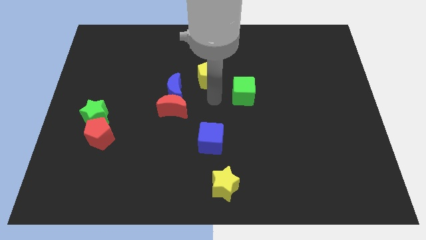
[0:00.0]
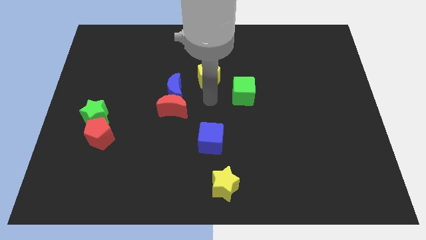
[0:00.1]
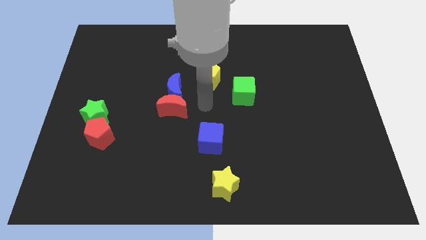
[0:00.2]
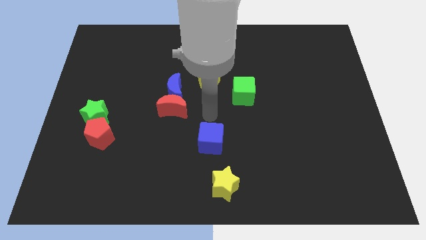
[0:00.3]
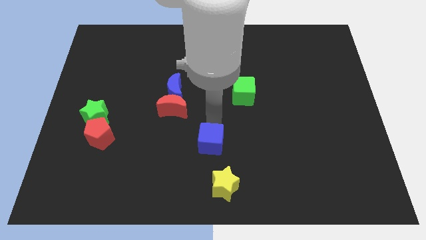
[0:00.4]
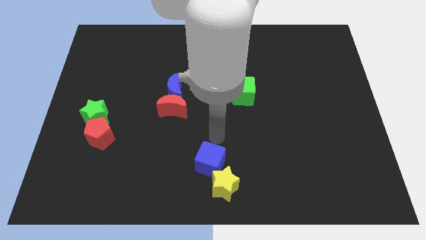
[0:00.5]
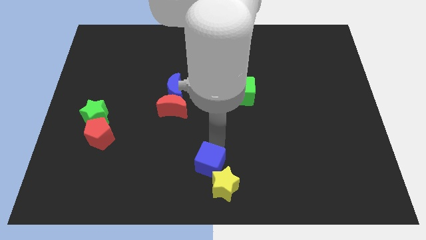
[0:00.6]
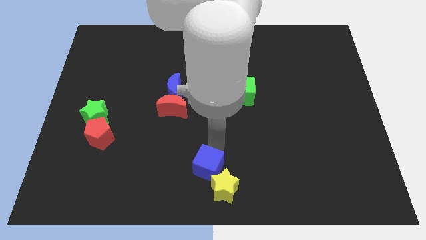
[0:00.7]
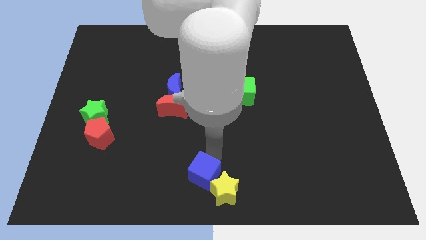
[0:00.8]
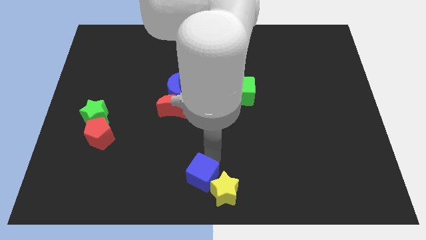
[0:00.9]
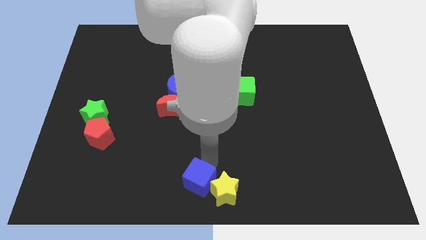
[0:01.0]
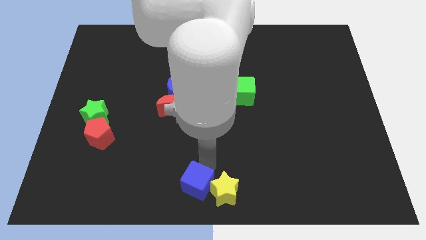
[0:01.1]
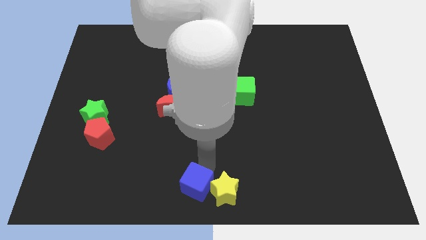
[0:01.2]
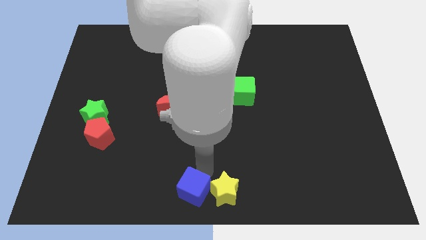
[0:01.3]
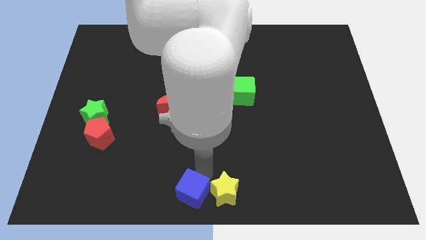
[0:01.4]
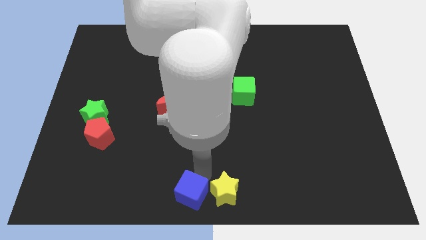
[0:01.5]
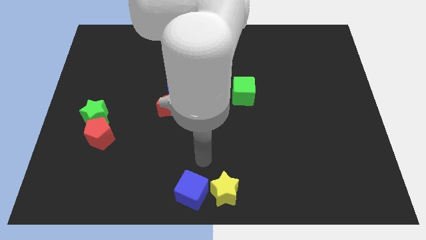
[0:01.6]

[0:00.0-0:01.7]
place the blue cube left to the yellow star

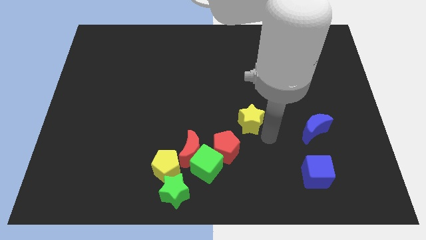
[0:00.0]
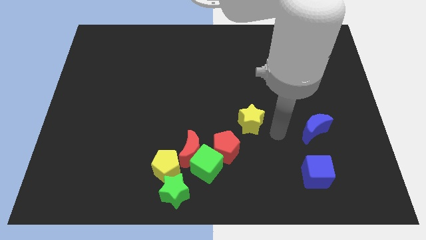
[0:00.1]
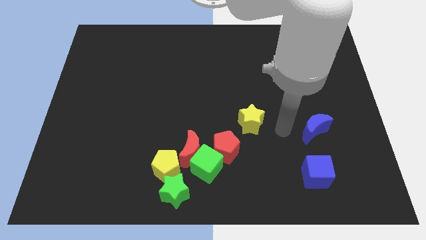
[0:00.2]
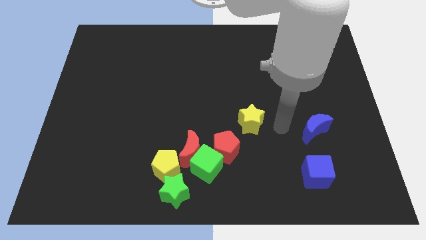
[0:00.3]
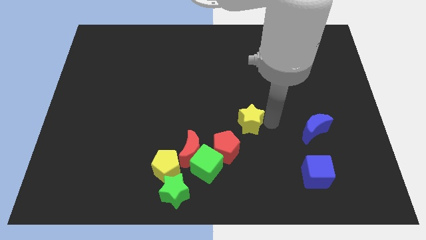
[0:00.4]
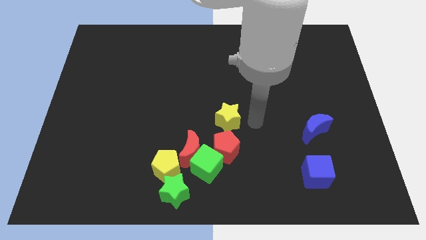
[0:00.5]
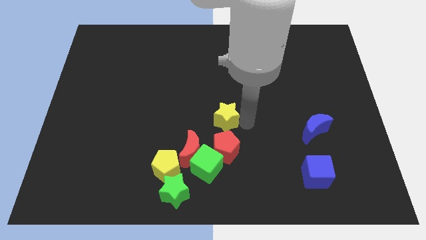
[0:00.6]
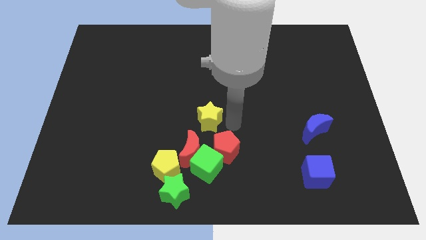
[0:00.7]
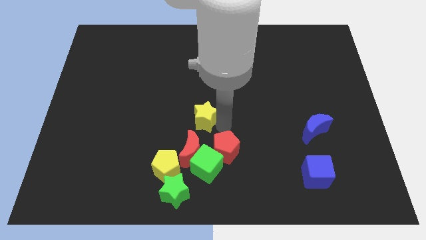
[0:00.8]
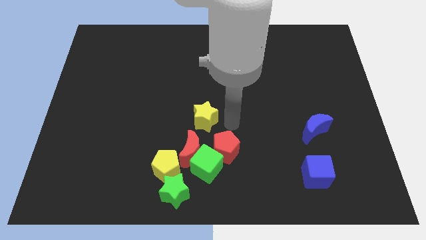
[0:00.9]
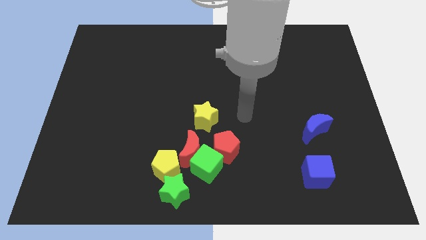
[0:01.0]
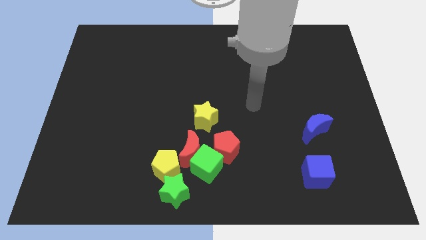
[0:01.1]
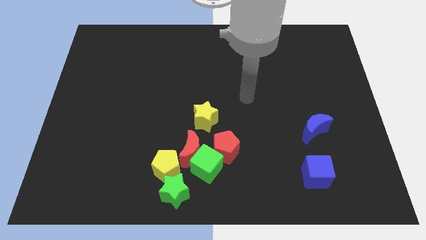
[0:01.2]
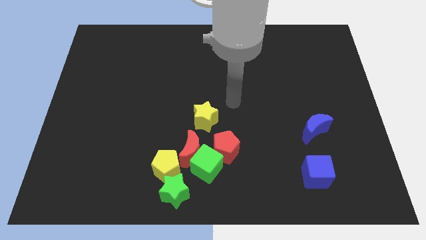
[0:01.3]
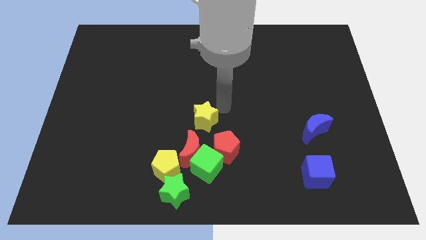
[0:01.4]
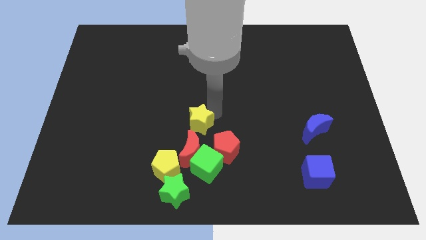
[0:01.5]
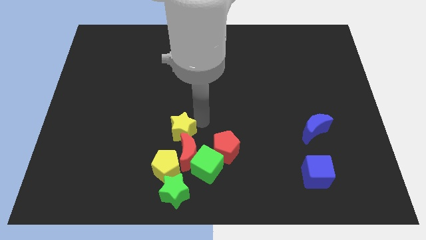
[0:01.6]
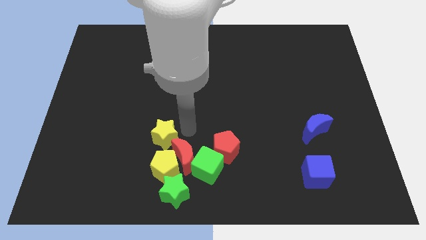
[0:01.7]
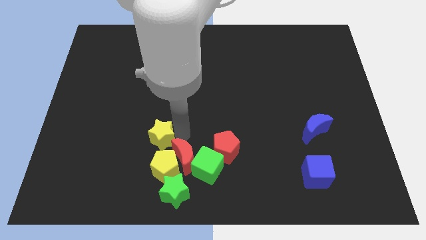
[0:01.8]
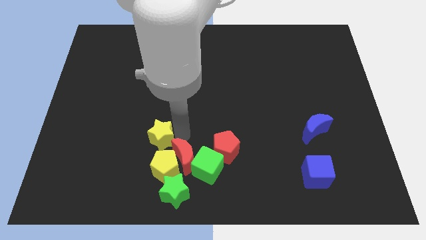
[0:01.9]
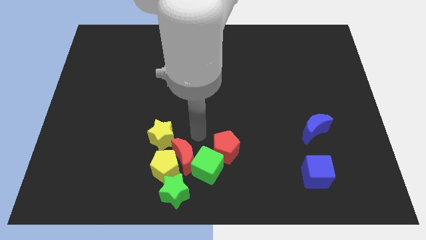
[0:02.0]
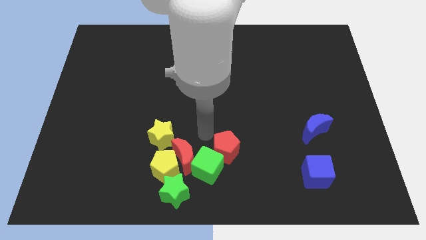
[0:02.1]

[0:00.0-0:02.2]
push the yellow star to the top left of red moon

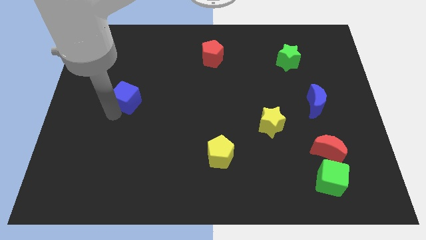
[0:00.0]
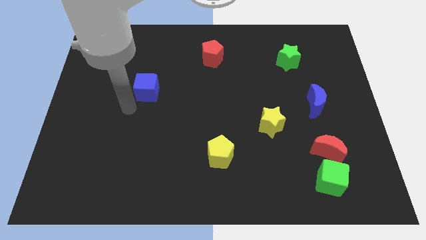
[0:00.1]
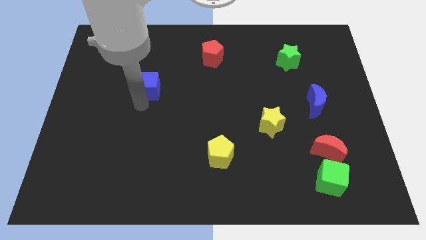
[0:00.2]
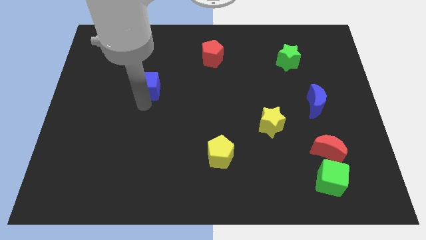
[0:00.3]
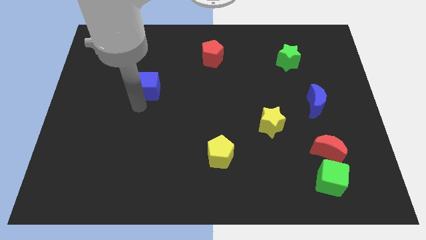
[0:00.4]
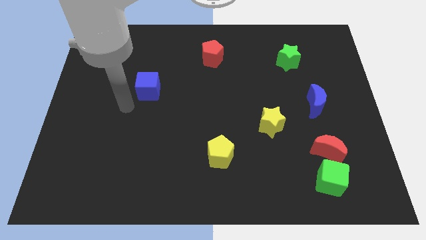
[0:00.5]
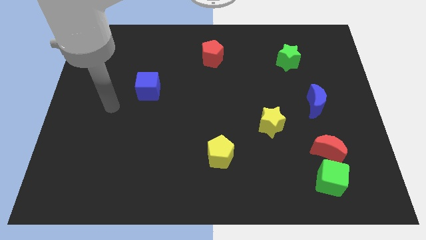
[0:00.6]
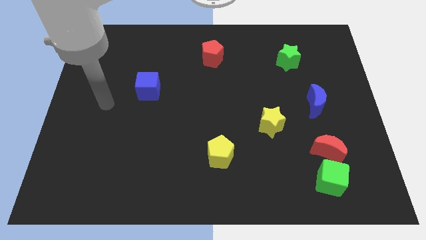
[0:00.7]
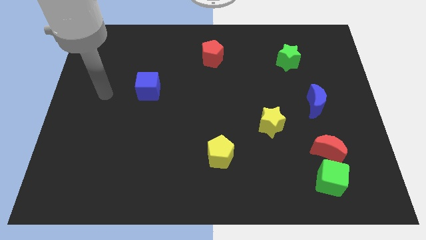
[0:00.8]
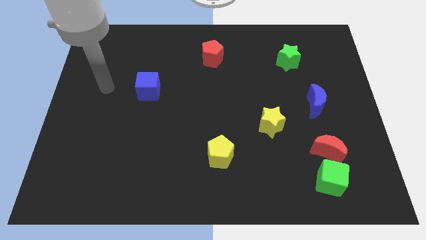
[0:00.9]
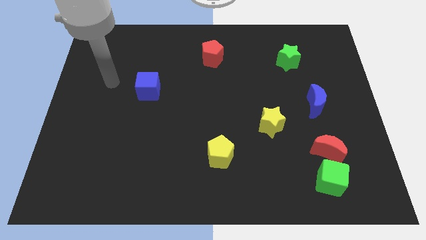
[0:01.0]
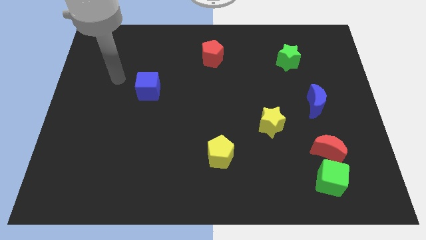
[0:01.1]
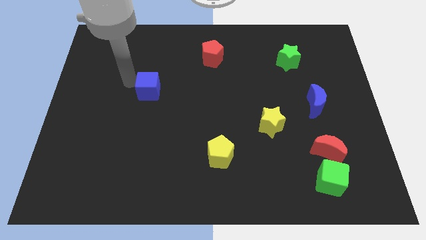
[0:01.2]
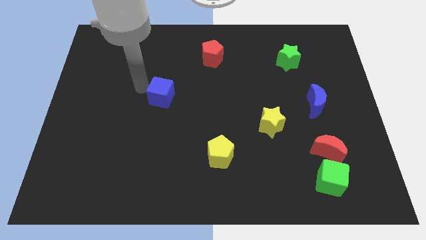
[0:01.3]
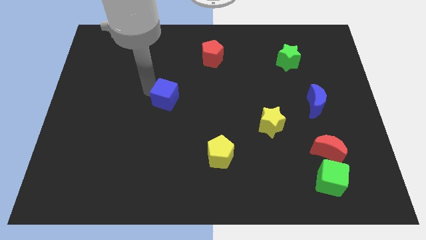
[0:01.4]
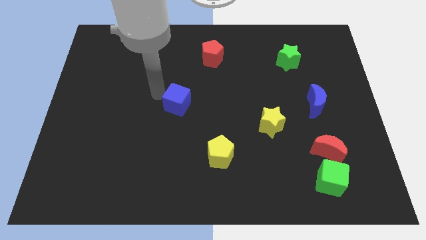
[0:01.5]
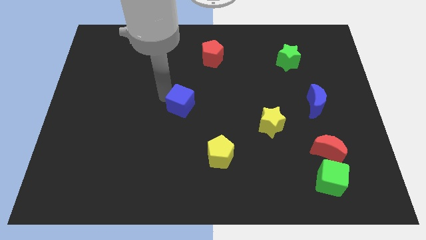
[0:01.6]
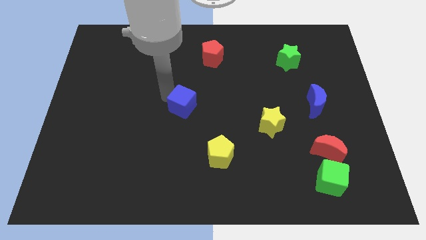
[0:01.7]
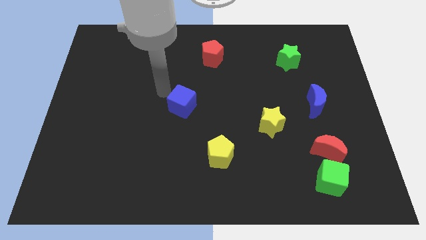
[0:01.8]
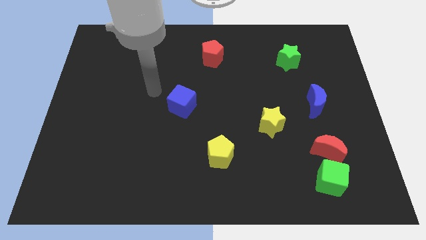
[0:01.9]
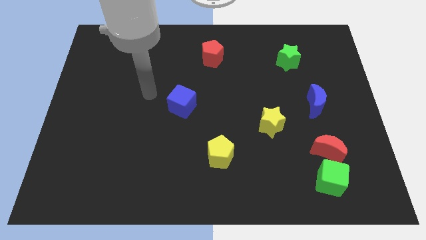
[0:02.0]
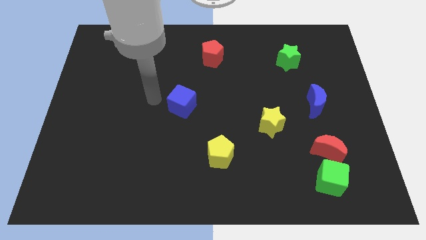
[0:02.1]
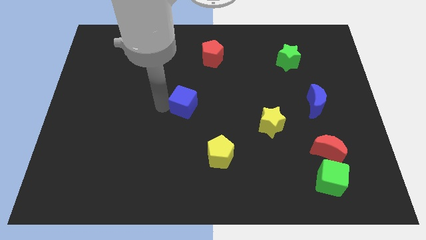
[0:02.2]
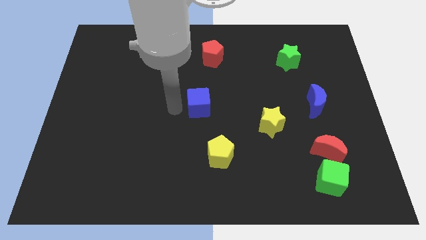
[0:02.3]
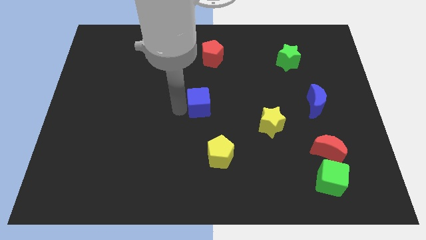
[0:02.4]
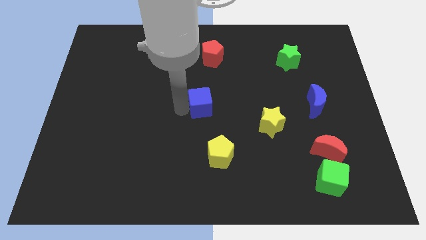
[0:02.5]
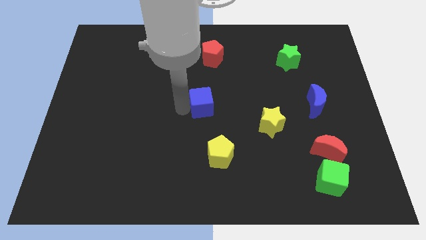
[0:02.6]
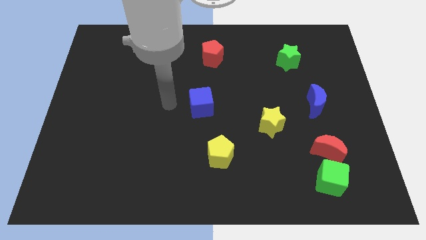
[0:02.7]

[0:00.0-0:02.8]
place the blue cube at the center of the board

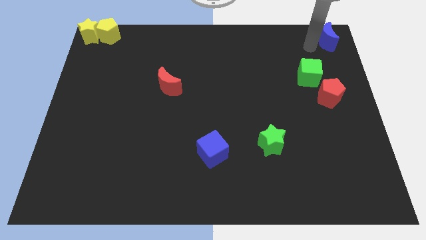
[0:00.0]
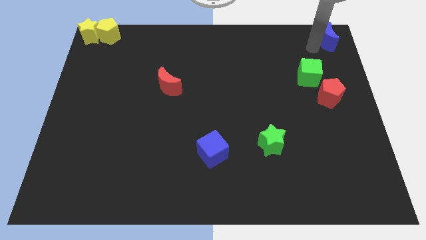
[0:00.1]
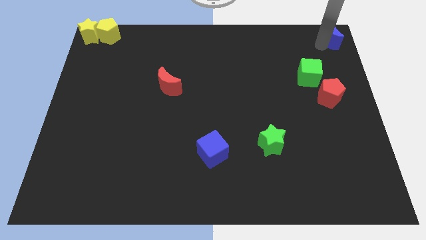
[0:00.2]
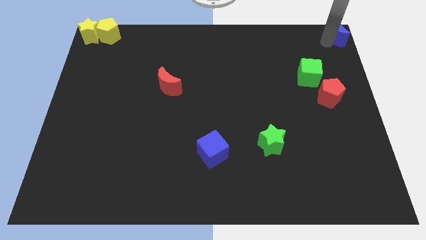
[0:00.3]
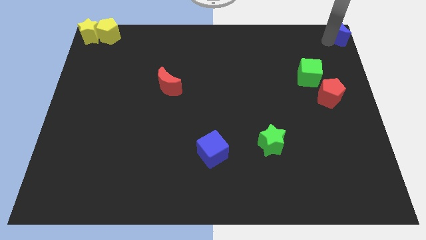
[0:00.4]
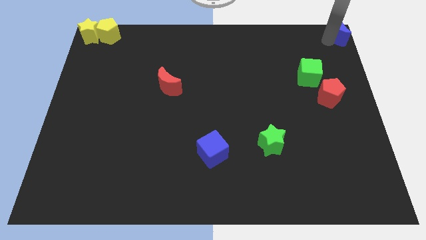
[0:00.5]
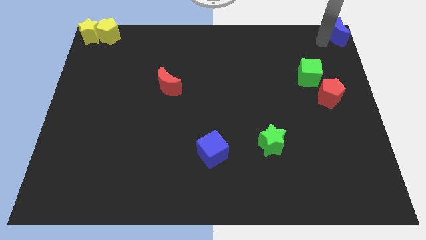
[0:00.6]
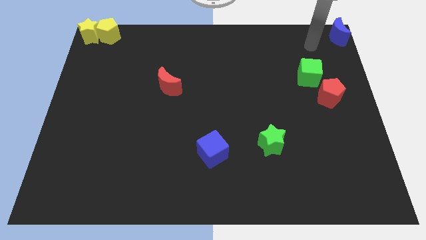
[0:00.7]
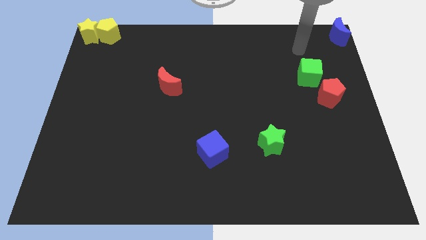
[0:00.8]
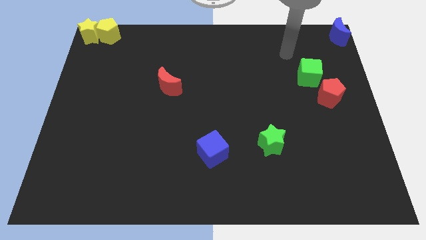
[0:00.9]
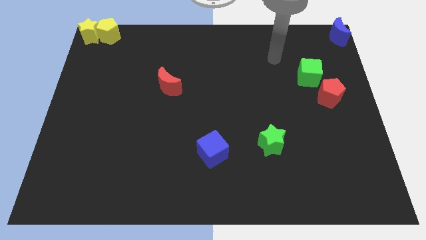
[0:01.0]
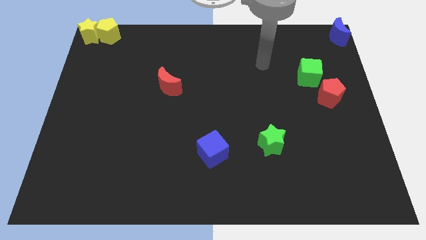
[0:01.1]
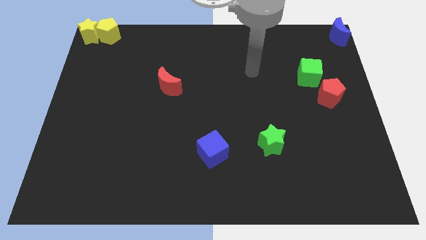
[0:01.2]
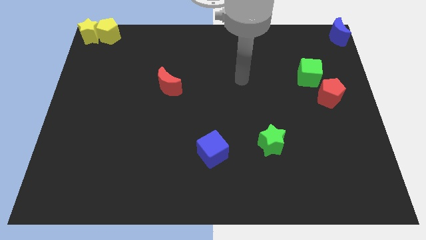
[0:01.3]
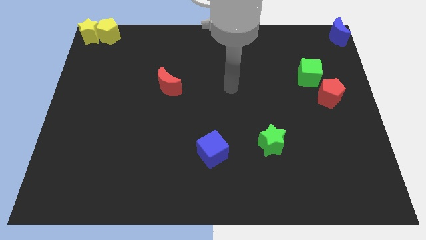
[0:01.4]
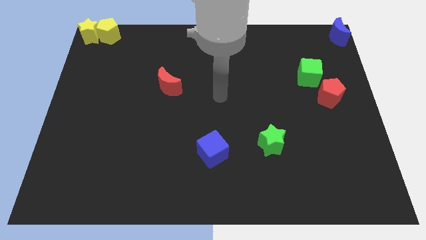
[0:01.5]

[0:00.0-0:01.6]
move your arm to the center of the board

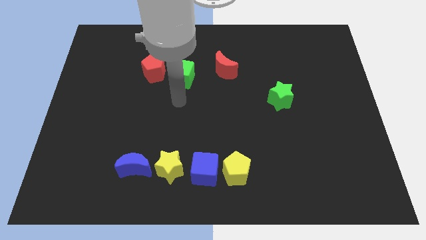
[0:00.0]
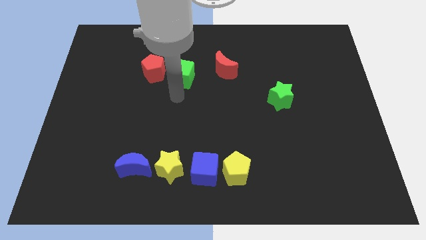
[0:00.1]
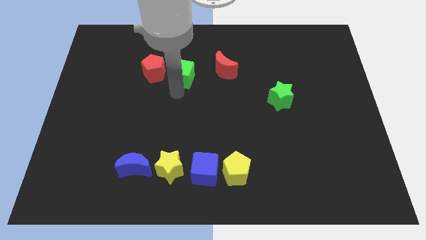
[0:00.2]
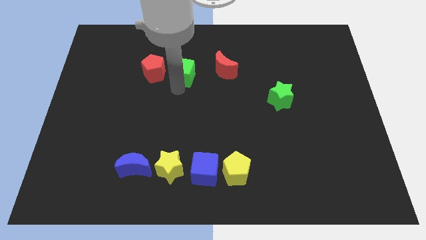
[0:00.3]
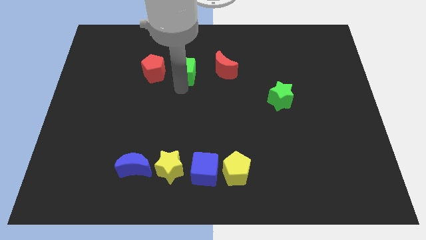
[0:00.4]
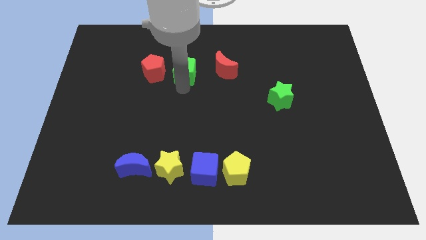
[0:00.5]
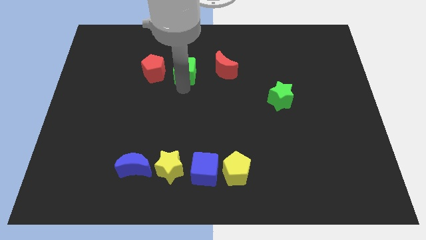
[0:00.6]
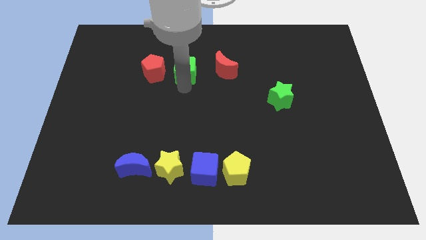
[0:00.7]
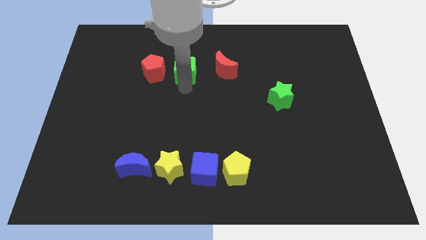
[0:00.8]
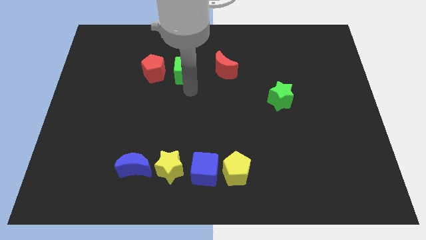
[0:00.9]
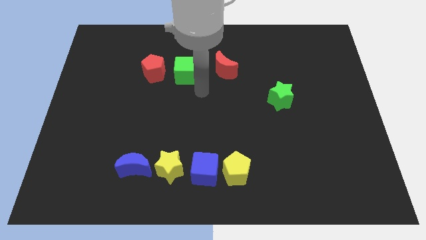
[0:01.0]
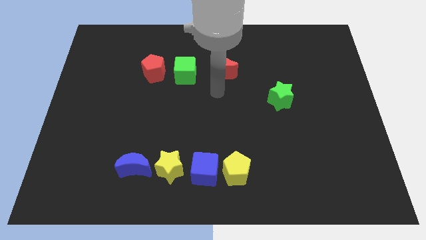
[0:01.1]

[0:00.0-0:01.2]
slightly push the green cube upwards of the board
